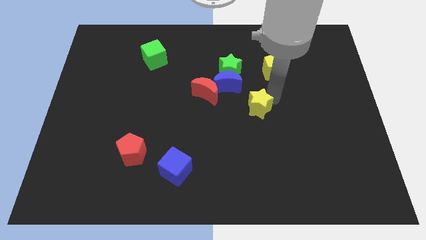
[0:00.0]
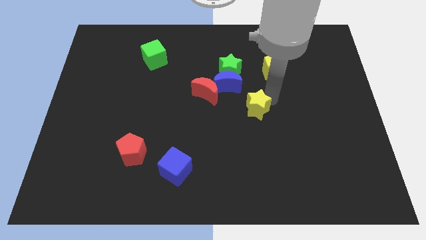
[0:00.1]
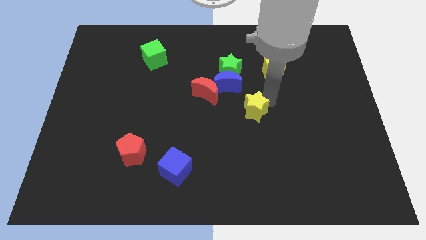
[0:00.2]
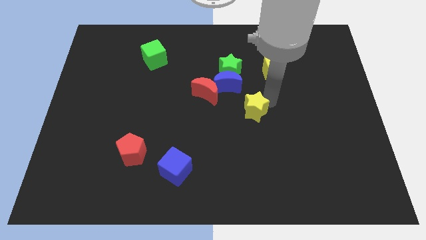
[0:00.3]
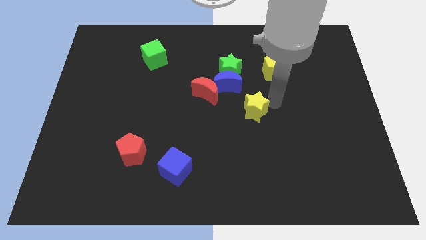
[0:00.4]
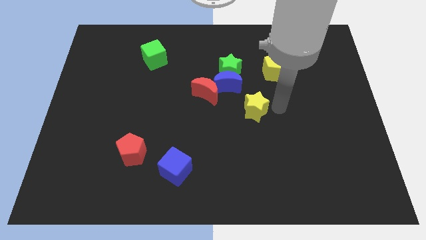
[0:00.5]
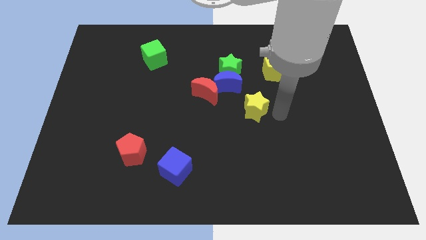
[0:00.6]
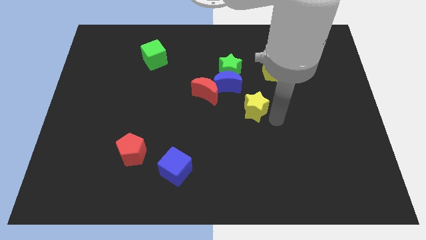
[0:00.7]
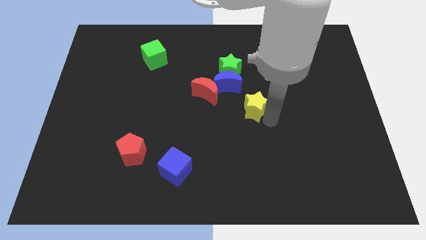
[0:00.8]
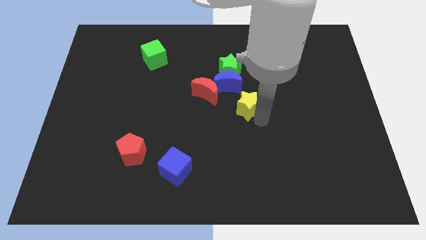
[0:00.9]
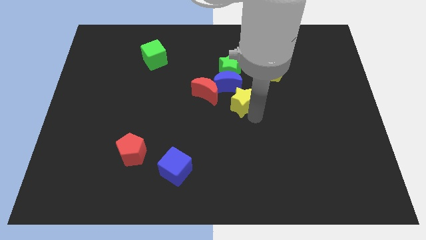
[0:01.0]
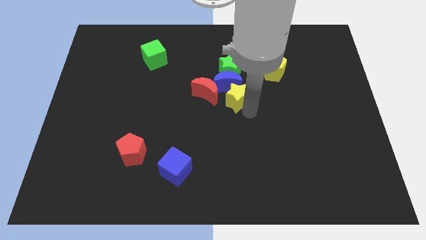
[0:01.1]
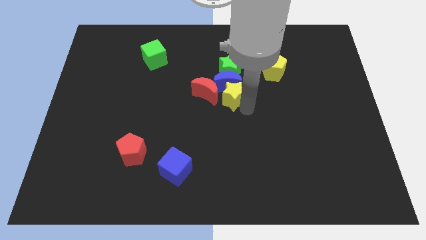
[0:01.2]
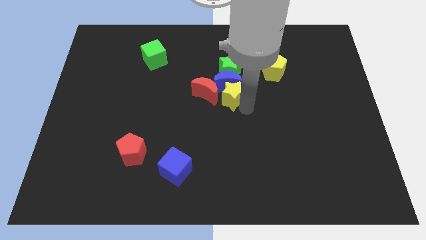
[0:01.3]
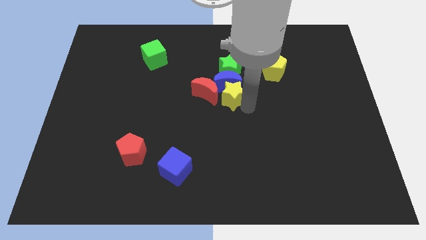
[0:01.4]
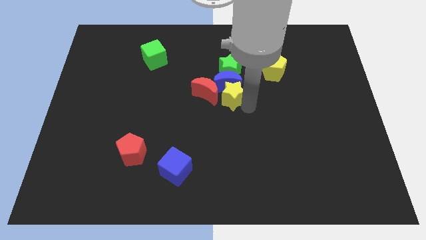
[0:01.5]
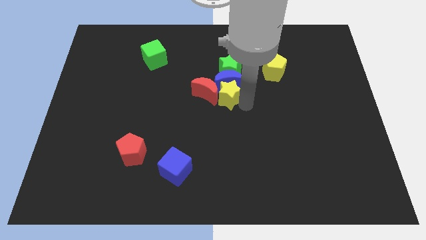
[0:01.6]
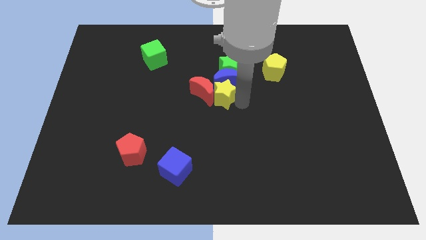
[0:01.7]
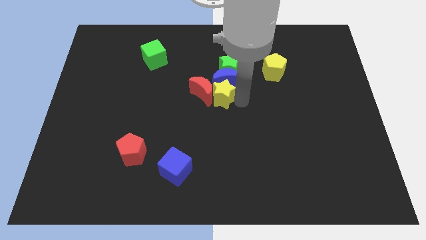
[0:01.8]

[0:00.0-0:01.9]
push the yellow star to the bottom of the blue crescent

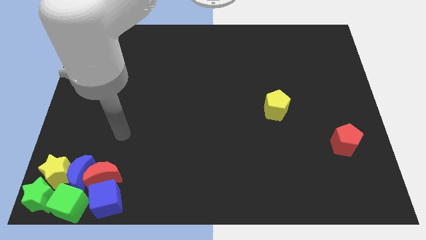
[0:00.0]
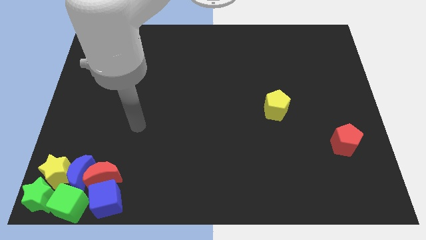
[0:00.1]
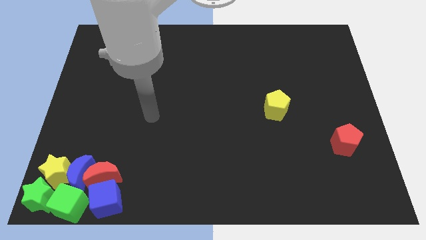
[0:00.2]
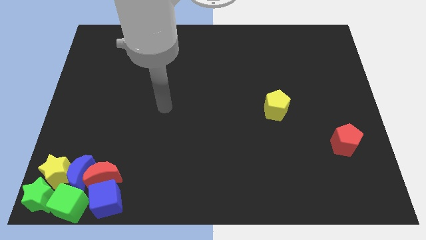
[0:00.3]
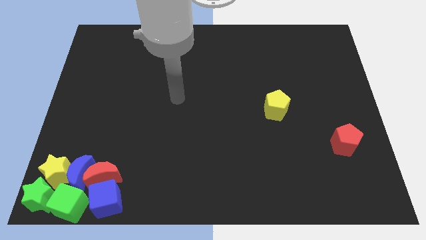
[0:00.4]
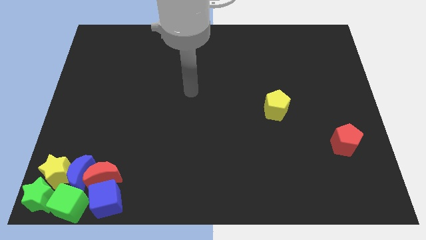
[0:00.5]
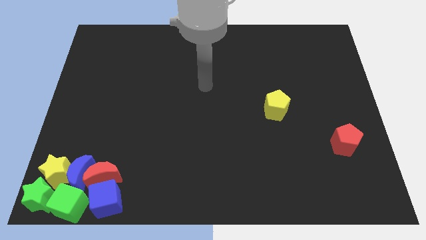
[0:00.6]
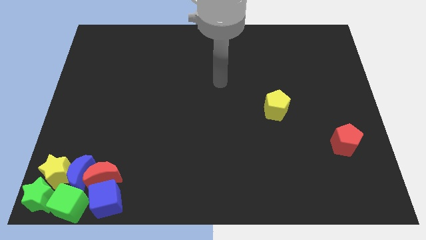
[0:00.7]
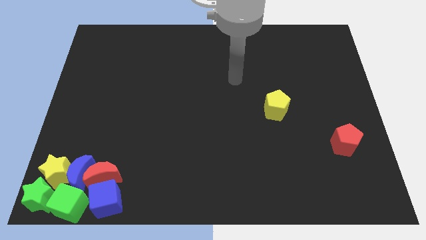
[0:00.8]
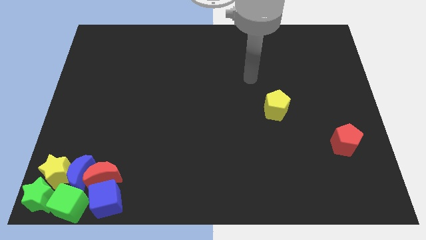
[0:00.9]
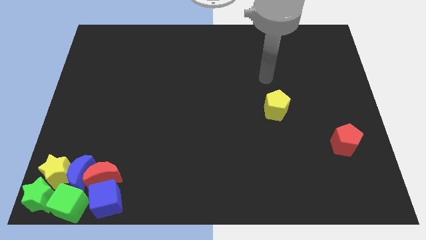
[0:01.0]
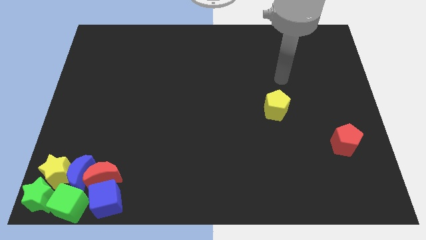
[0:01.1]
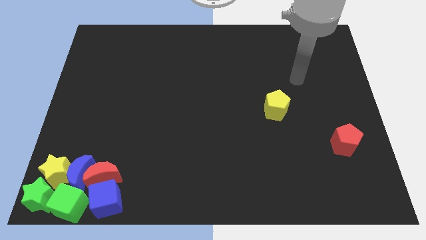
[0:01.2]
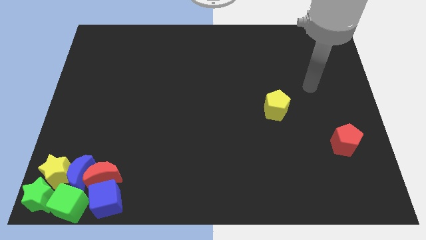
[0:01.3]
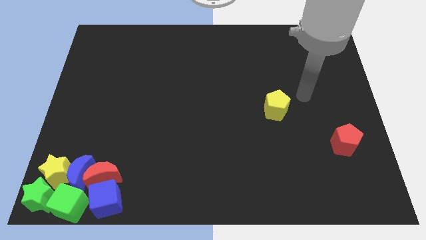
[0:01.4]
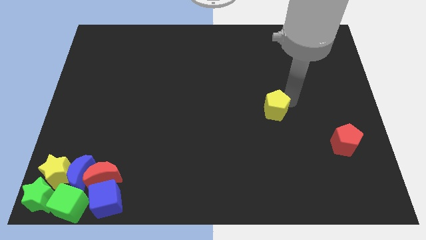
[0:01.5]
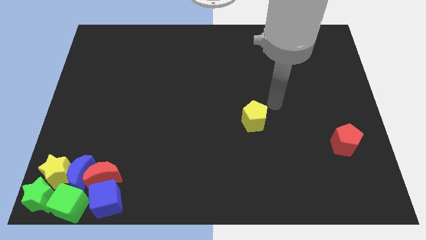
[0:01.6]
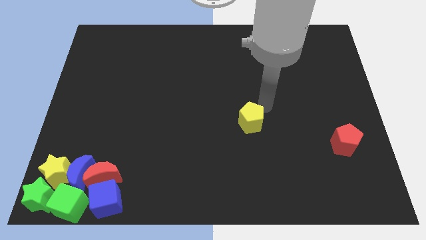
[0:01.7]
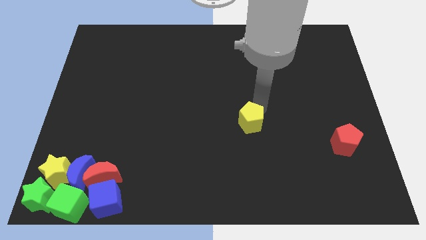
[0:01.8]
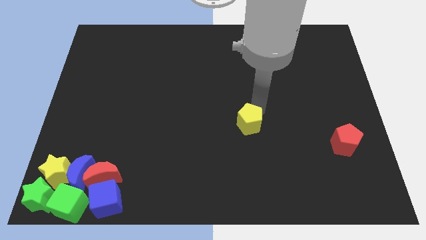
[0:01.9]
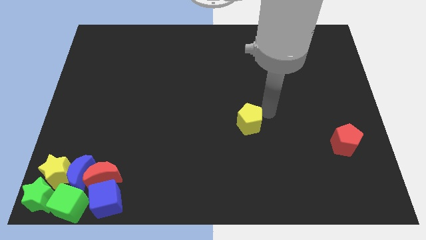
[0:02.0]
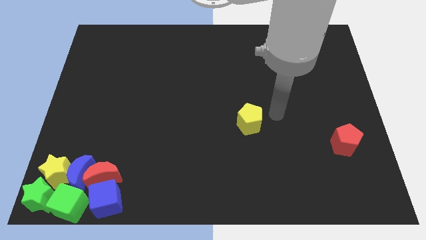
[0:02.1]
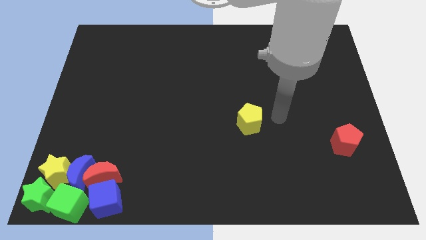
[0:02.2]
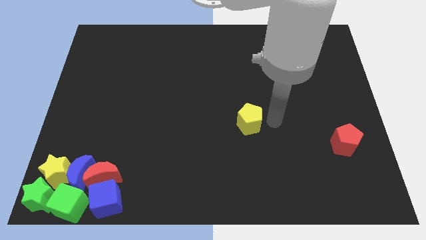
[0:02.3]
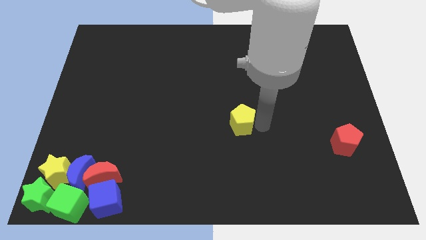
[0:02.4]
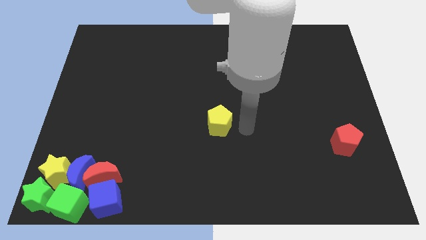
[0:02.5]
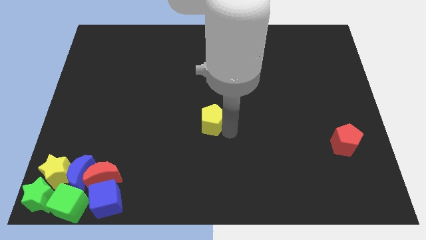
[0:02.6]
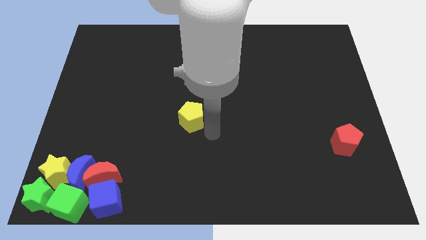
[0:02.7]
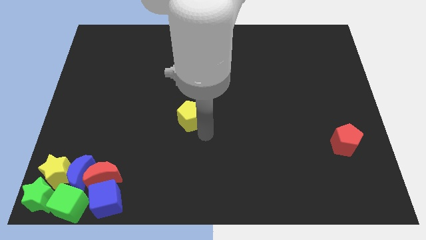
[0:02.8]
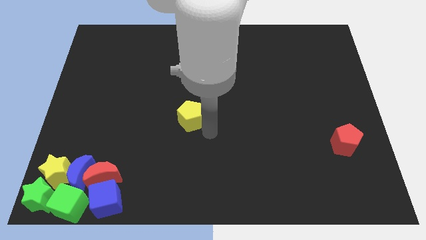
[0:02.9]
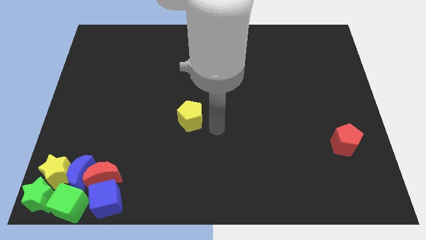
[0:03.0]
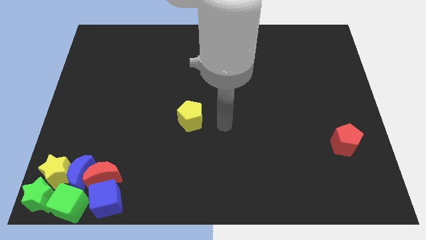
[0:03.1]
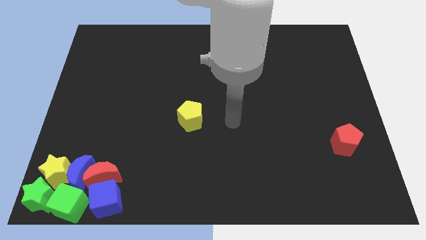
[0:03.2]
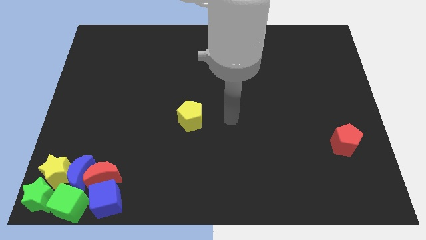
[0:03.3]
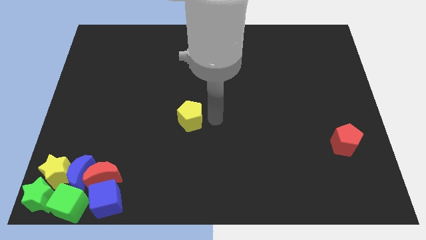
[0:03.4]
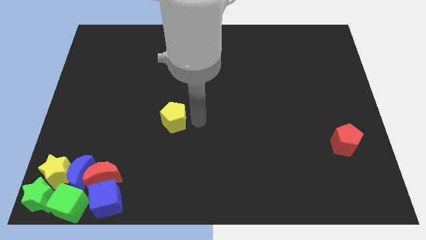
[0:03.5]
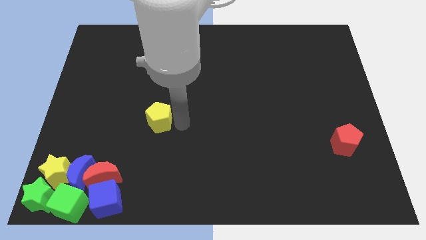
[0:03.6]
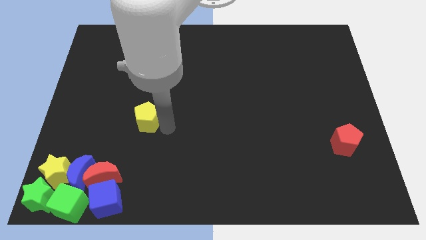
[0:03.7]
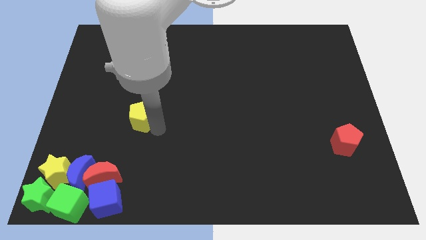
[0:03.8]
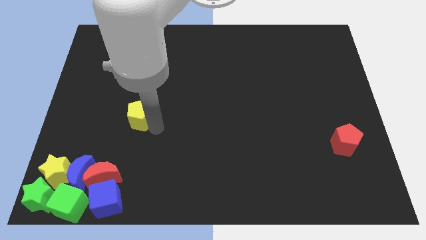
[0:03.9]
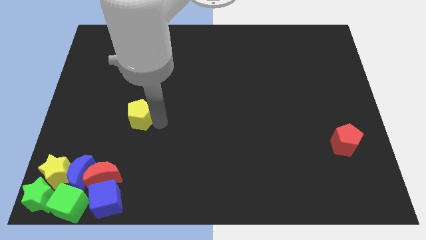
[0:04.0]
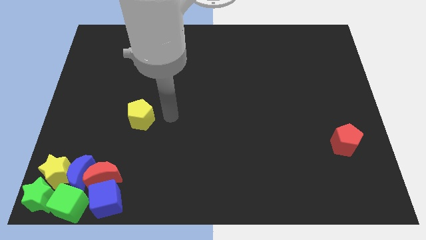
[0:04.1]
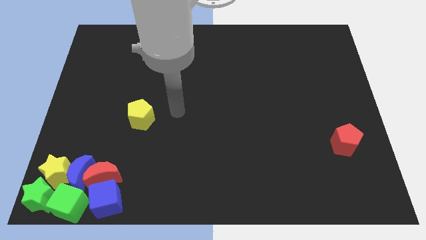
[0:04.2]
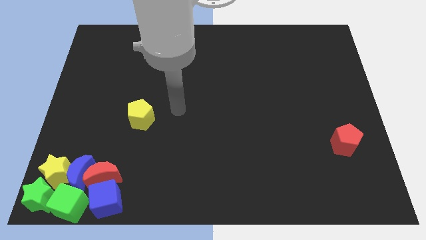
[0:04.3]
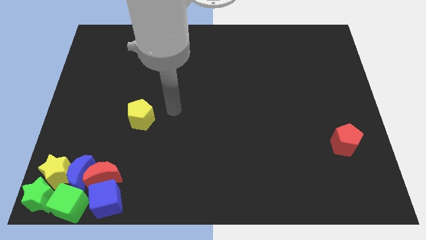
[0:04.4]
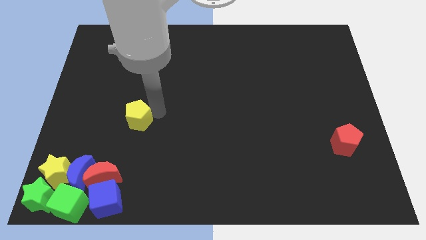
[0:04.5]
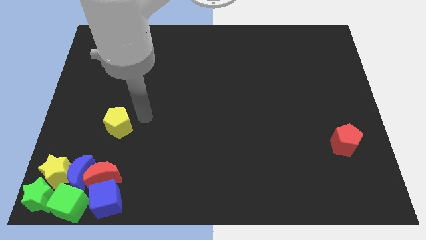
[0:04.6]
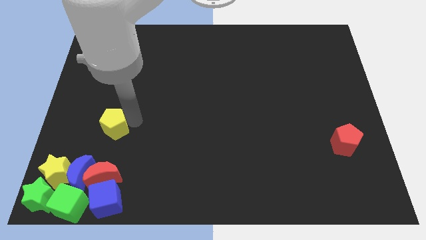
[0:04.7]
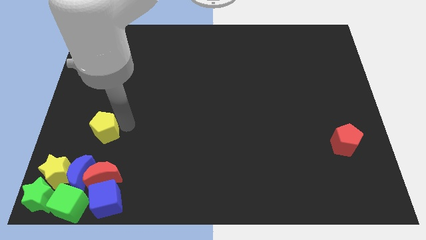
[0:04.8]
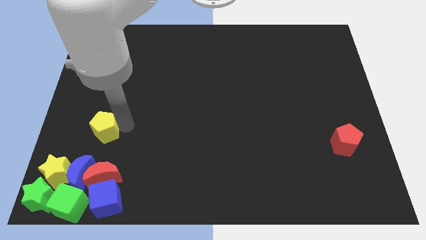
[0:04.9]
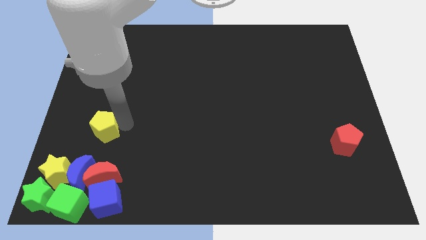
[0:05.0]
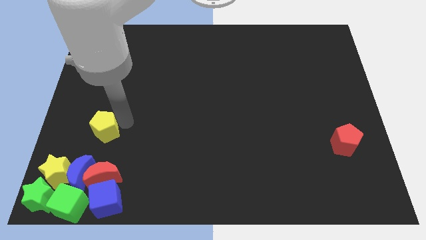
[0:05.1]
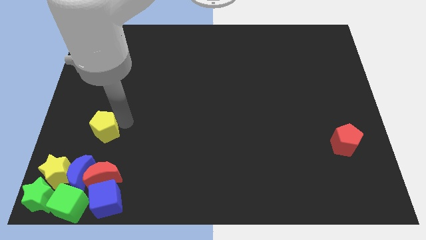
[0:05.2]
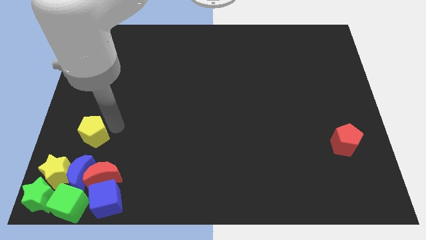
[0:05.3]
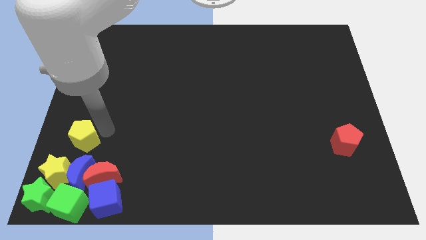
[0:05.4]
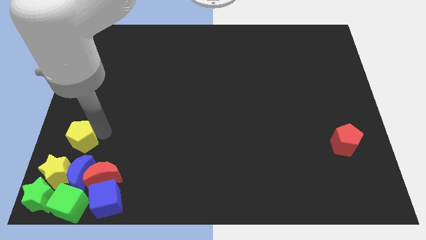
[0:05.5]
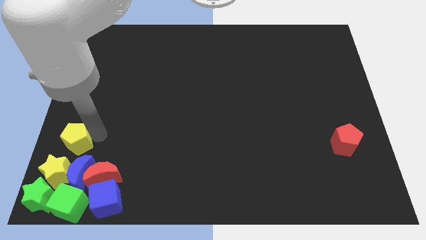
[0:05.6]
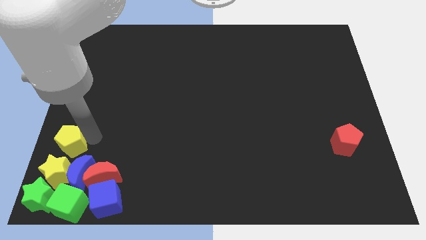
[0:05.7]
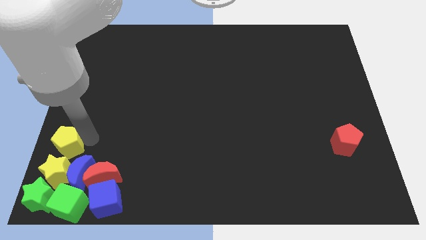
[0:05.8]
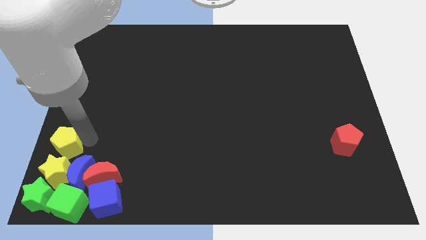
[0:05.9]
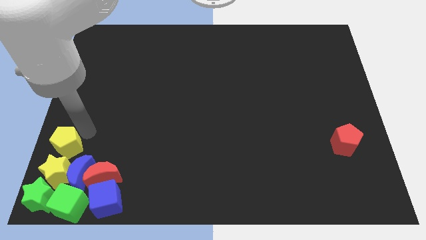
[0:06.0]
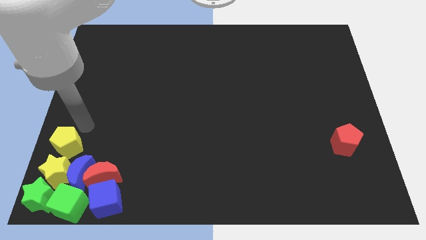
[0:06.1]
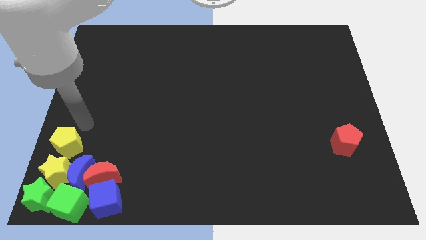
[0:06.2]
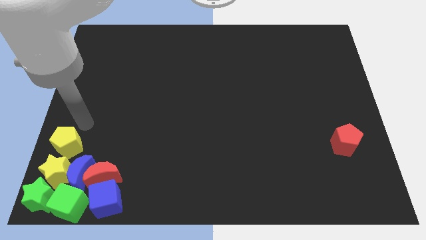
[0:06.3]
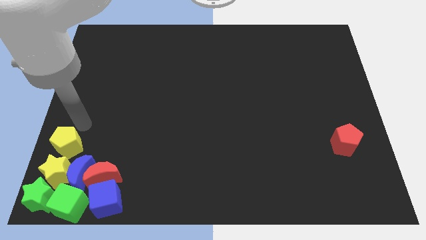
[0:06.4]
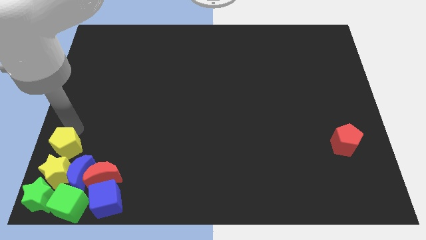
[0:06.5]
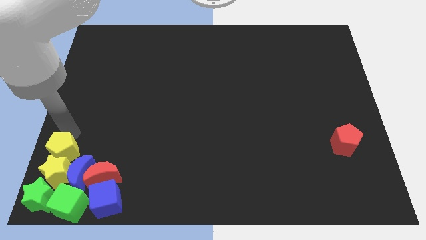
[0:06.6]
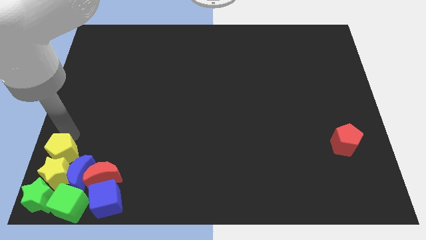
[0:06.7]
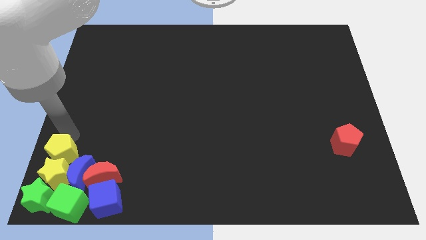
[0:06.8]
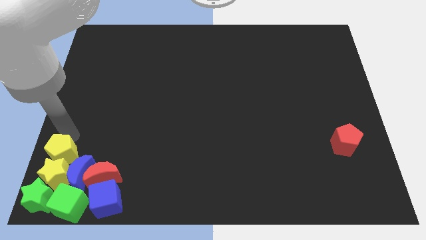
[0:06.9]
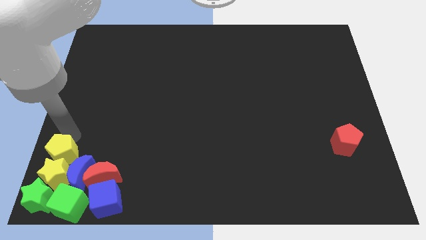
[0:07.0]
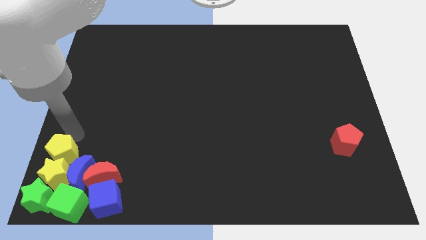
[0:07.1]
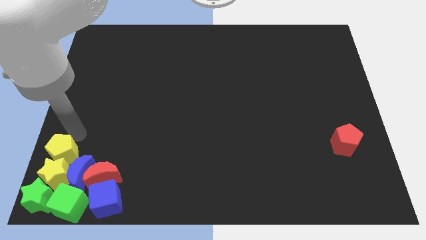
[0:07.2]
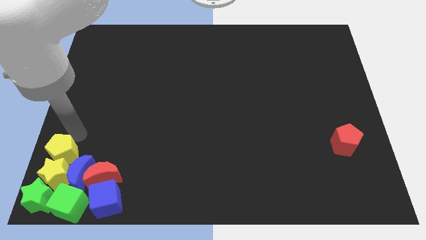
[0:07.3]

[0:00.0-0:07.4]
move the yellow pentagon into the group of blocks
